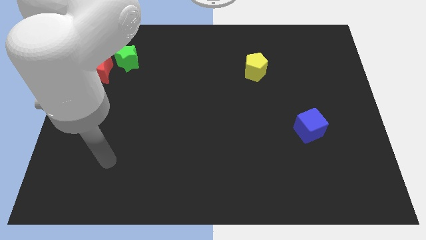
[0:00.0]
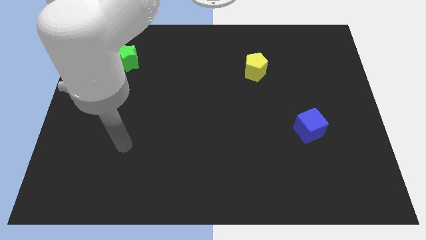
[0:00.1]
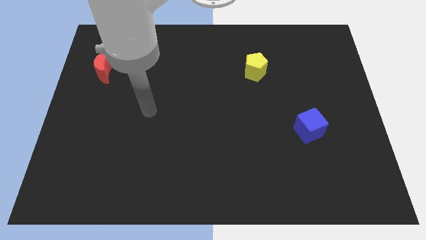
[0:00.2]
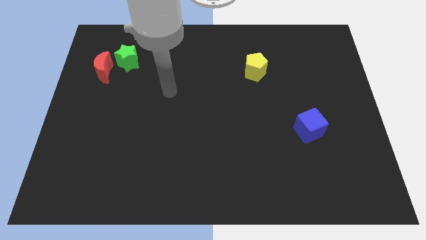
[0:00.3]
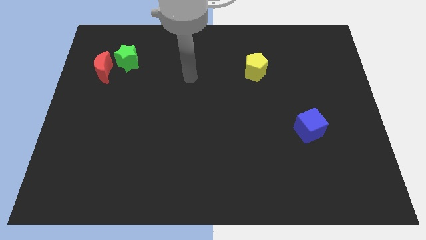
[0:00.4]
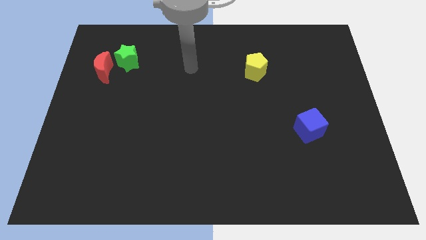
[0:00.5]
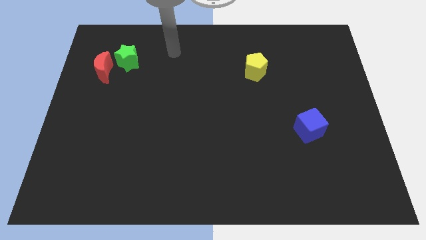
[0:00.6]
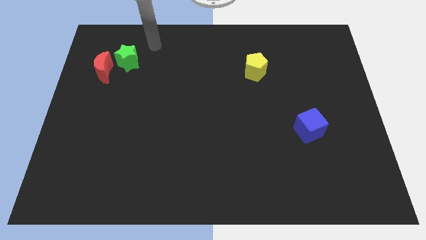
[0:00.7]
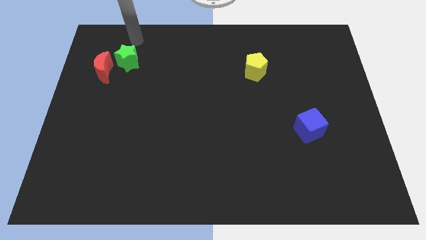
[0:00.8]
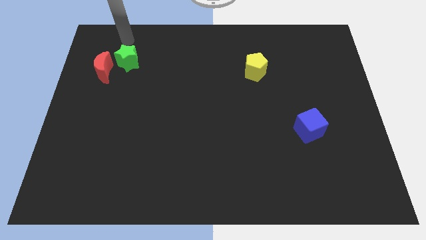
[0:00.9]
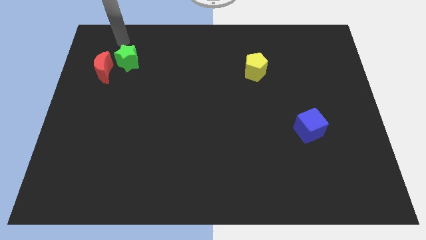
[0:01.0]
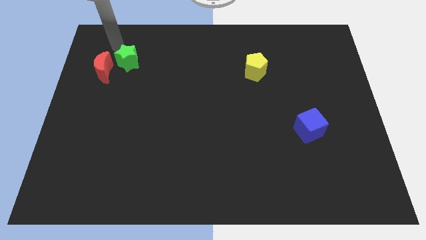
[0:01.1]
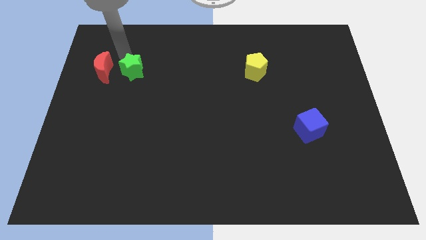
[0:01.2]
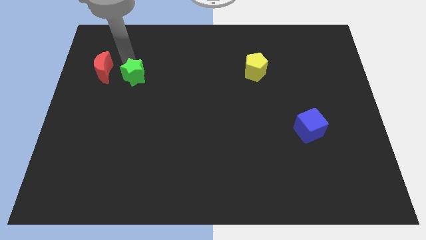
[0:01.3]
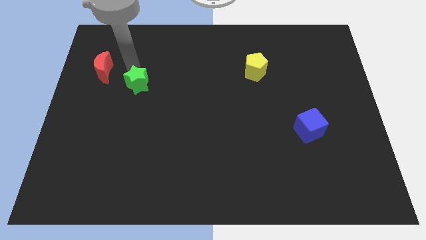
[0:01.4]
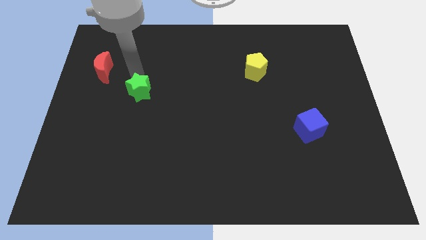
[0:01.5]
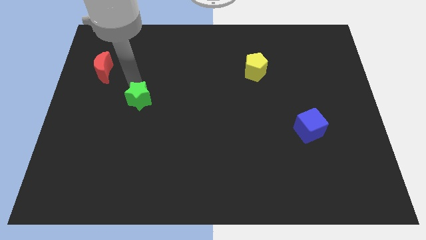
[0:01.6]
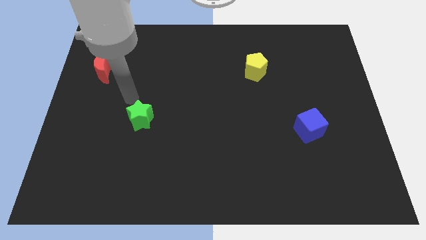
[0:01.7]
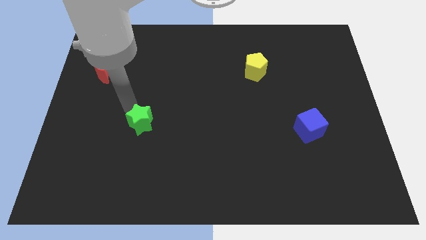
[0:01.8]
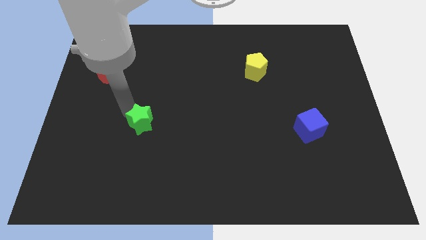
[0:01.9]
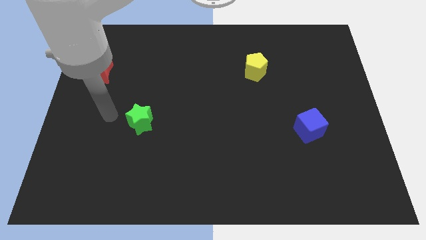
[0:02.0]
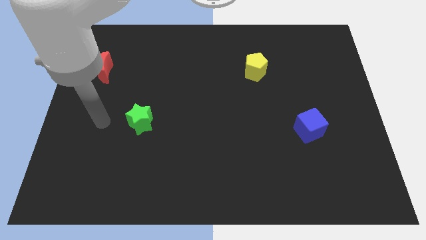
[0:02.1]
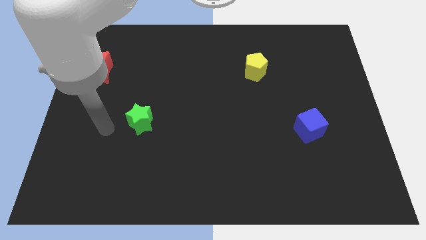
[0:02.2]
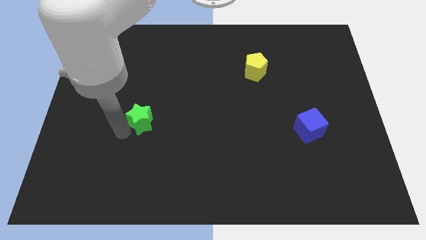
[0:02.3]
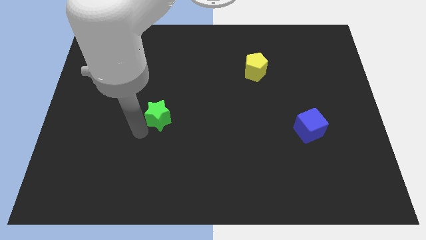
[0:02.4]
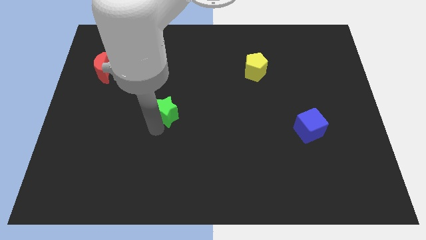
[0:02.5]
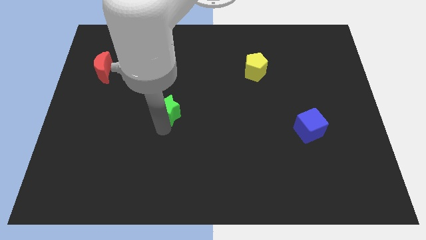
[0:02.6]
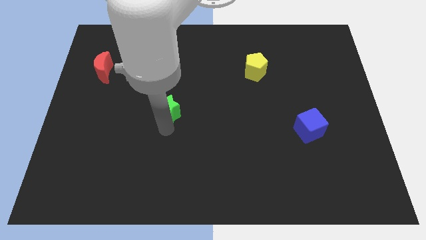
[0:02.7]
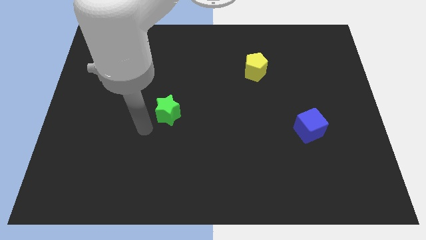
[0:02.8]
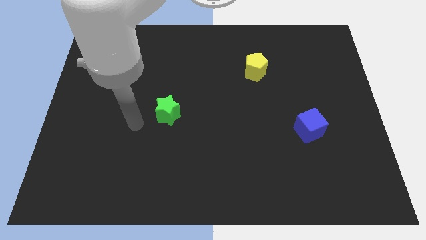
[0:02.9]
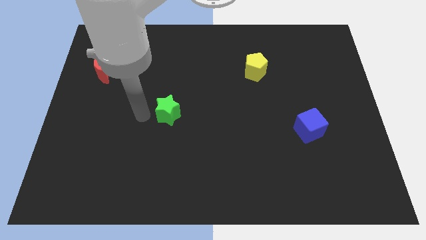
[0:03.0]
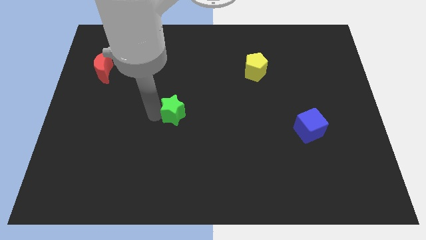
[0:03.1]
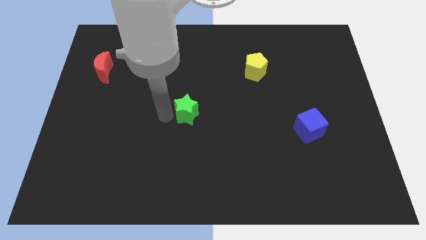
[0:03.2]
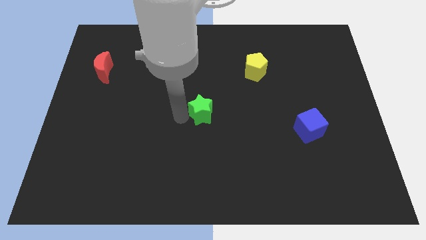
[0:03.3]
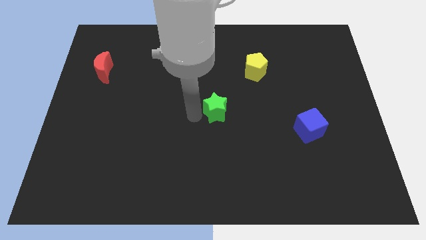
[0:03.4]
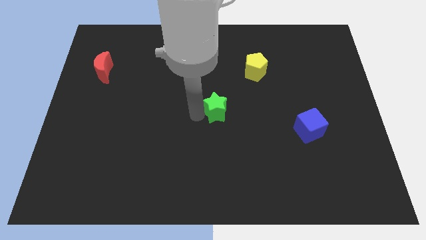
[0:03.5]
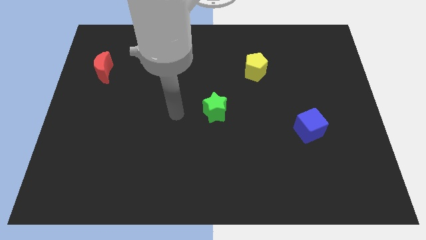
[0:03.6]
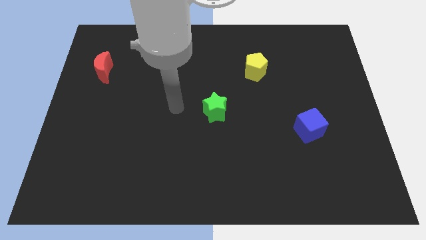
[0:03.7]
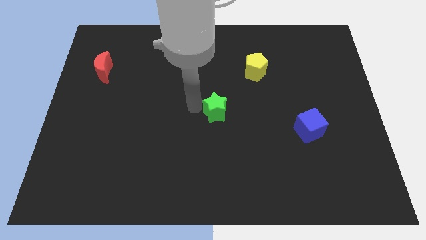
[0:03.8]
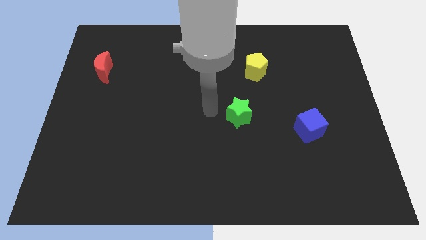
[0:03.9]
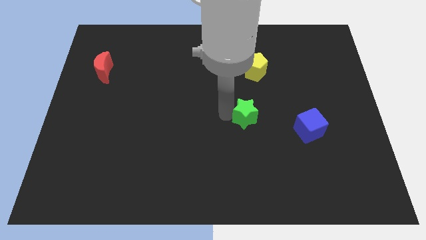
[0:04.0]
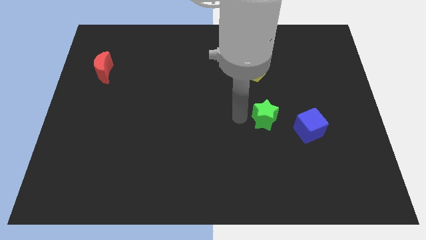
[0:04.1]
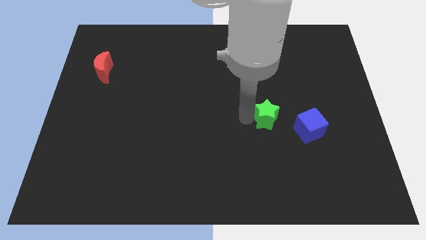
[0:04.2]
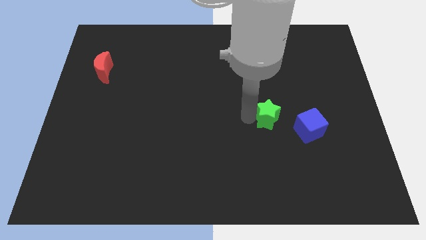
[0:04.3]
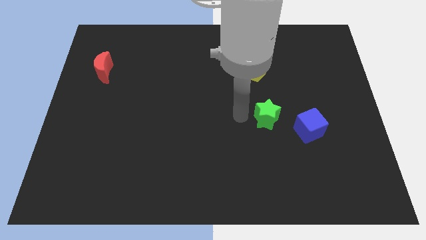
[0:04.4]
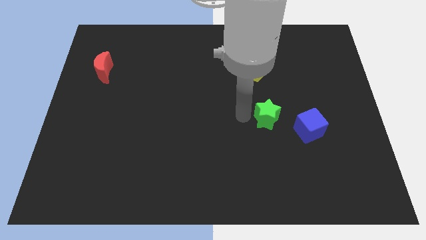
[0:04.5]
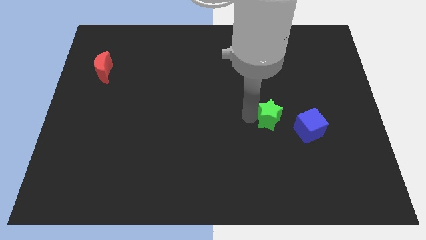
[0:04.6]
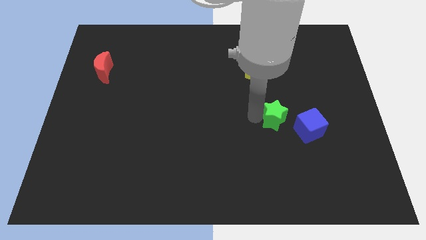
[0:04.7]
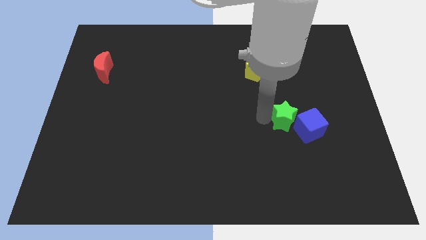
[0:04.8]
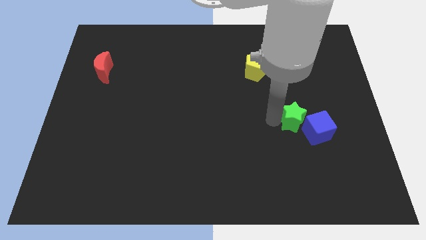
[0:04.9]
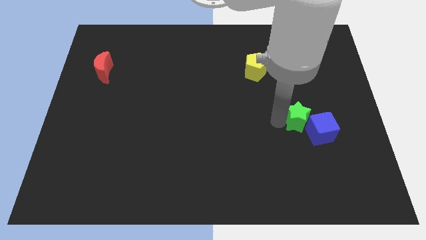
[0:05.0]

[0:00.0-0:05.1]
push the green block close to the blue cube

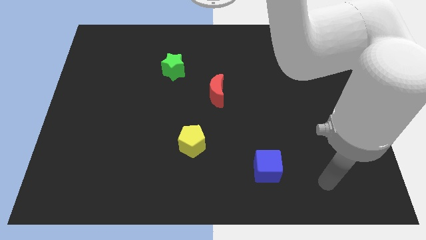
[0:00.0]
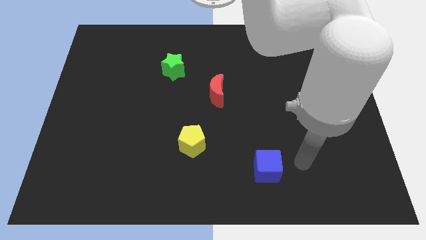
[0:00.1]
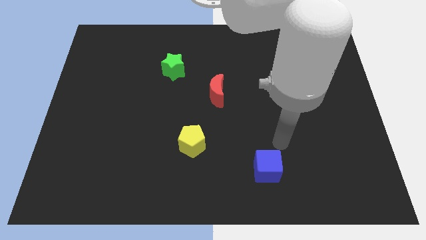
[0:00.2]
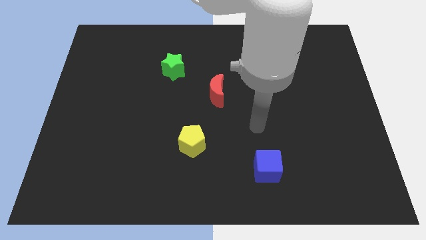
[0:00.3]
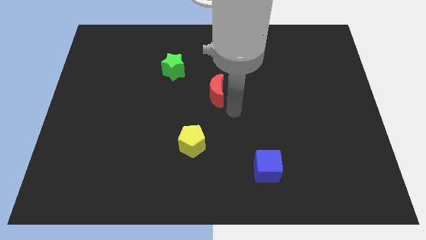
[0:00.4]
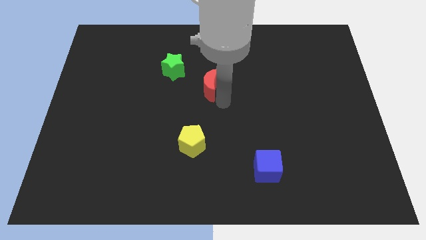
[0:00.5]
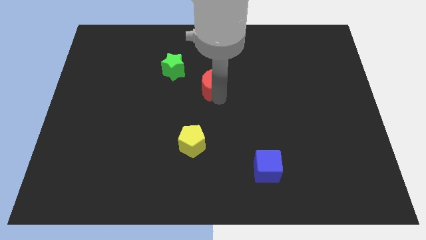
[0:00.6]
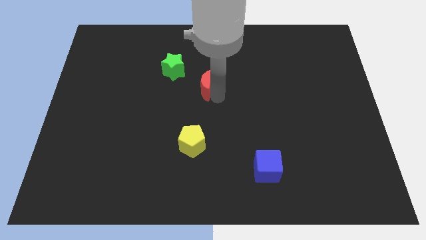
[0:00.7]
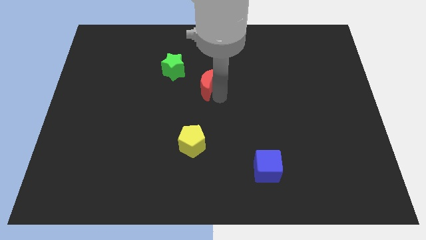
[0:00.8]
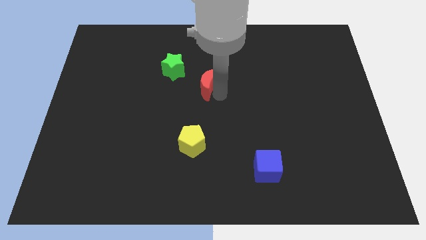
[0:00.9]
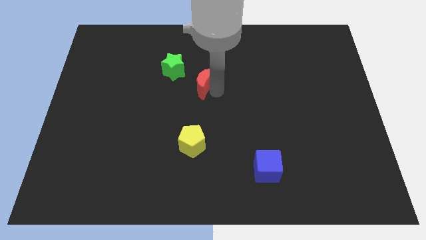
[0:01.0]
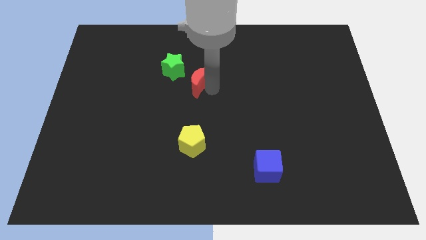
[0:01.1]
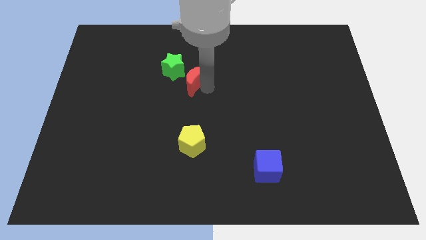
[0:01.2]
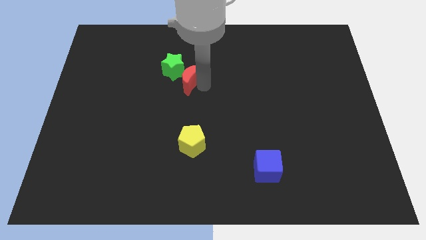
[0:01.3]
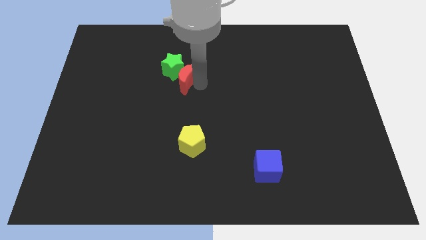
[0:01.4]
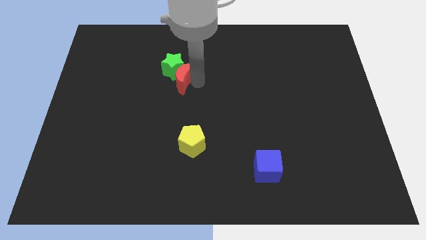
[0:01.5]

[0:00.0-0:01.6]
put the red moon next to the star

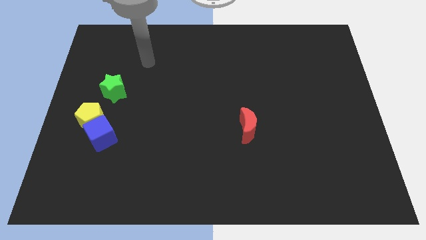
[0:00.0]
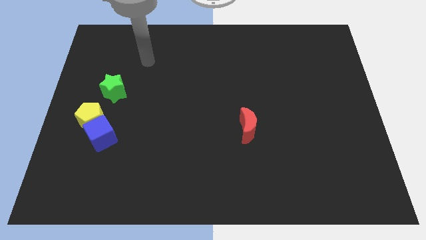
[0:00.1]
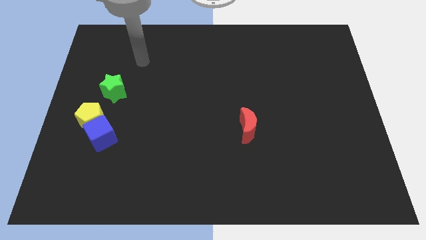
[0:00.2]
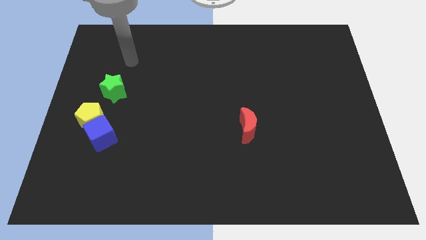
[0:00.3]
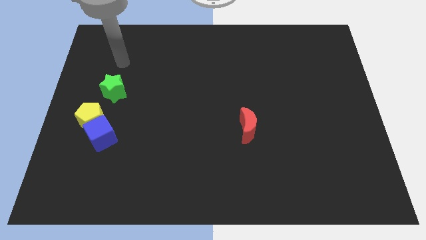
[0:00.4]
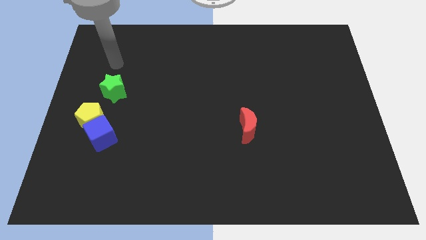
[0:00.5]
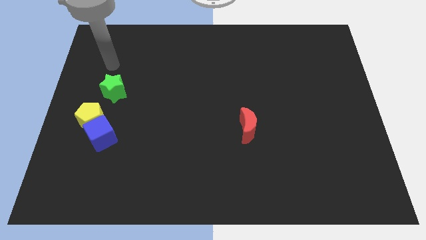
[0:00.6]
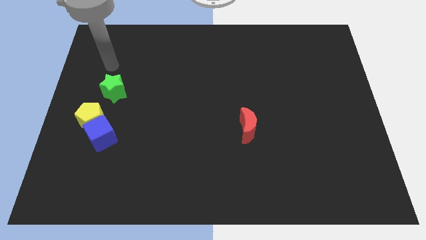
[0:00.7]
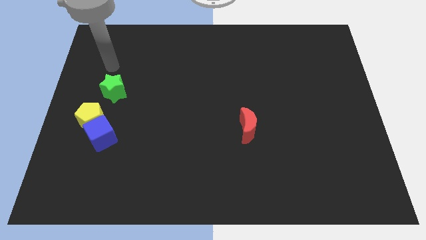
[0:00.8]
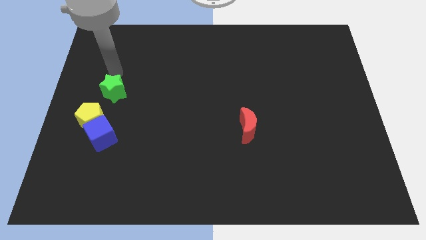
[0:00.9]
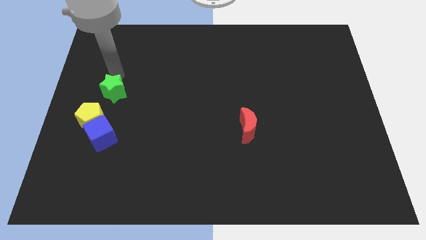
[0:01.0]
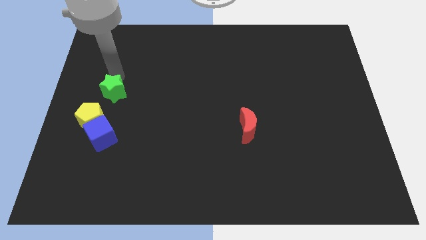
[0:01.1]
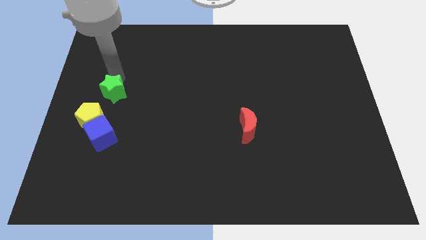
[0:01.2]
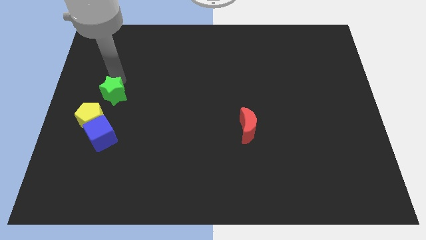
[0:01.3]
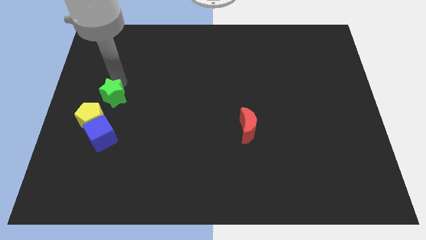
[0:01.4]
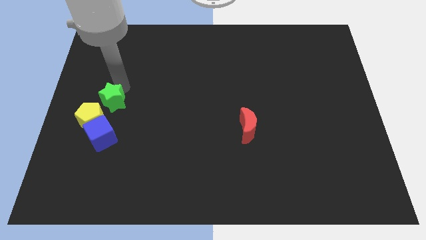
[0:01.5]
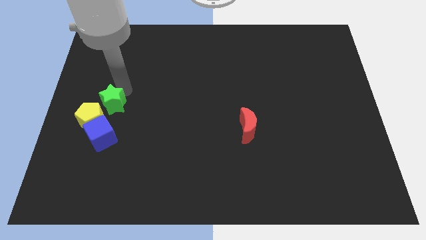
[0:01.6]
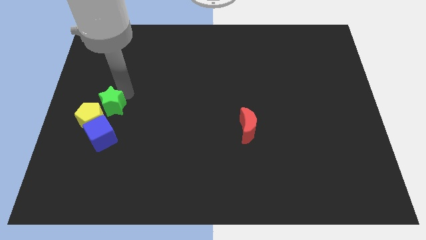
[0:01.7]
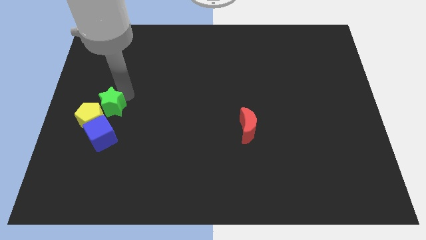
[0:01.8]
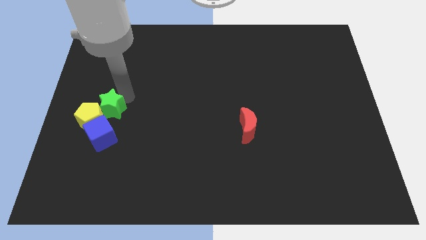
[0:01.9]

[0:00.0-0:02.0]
push the star close to the pentagon

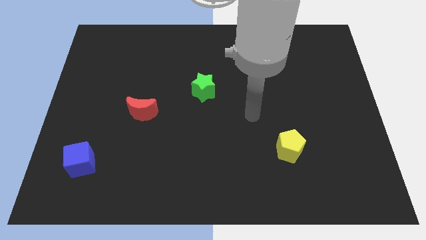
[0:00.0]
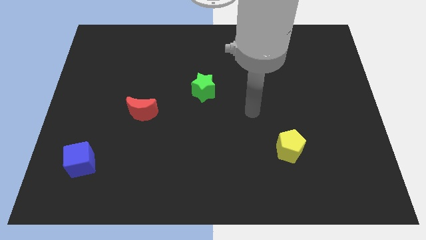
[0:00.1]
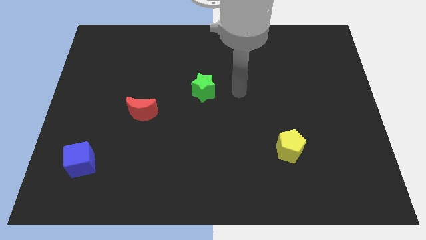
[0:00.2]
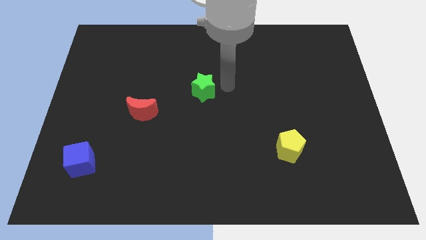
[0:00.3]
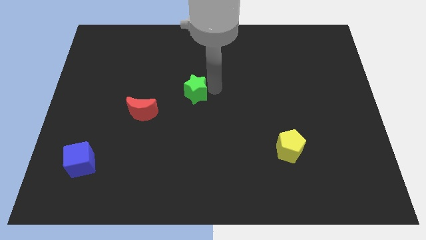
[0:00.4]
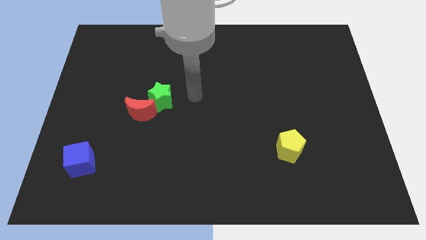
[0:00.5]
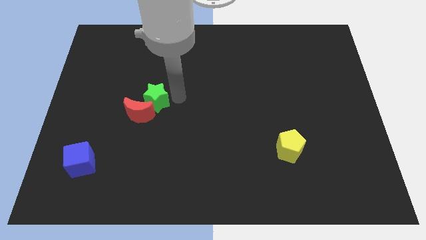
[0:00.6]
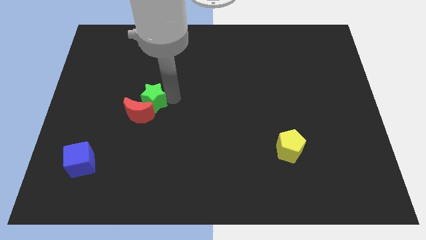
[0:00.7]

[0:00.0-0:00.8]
push the star towards the moon
